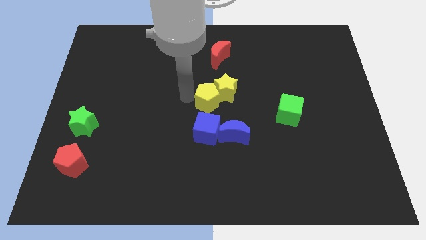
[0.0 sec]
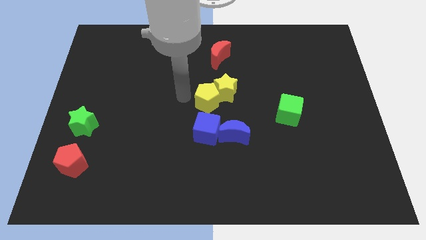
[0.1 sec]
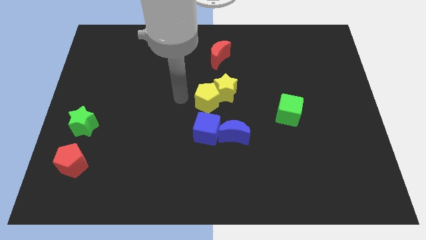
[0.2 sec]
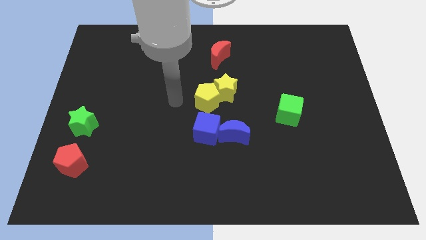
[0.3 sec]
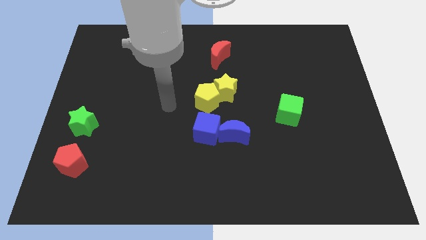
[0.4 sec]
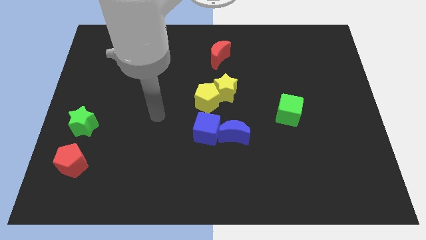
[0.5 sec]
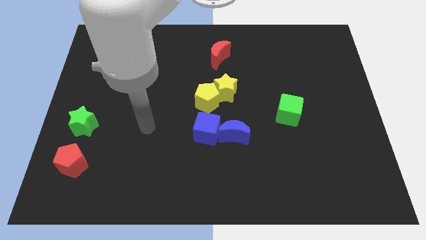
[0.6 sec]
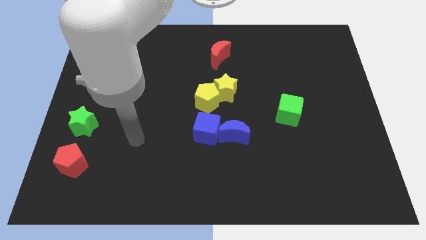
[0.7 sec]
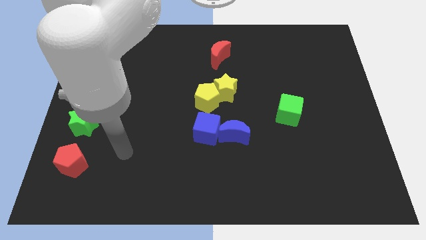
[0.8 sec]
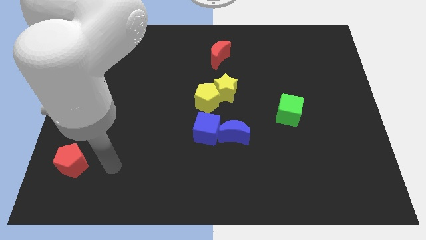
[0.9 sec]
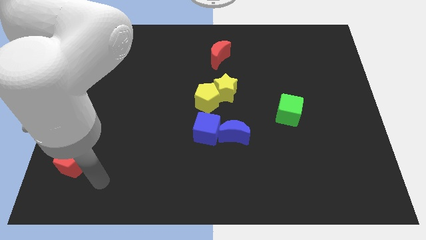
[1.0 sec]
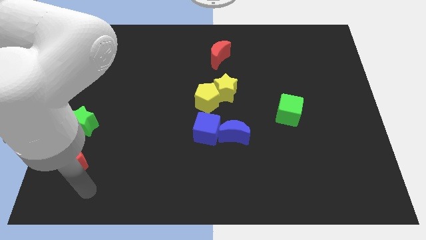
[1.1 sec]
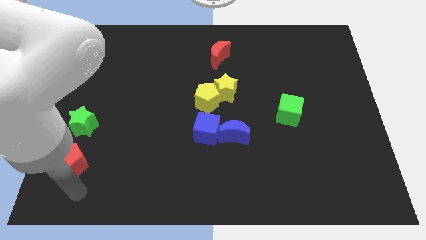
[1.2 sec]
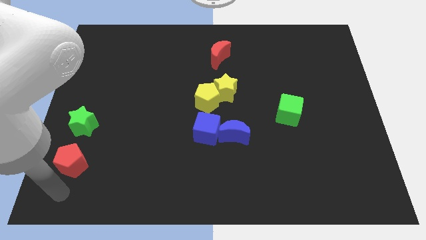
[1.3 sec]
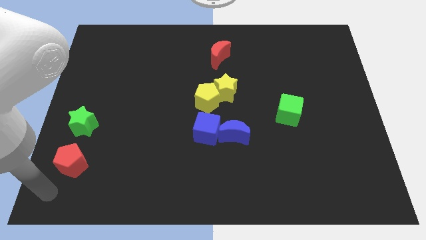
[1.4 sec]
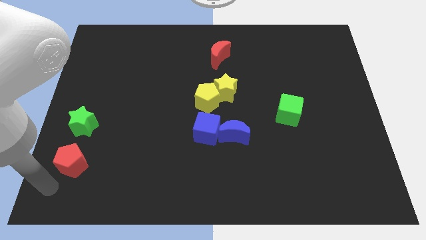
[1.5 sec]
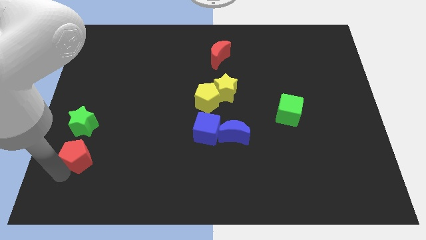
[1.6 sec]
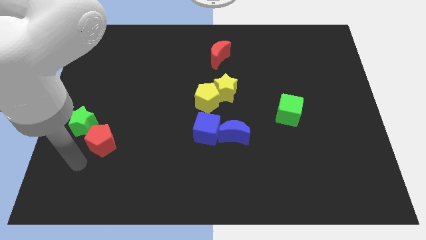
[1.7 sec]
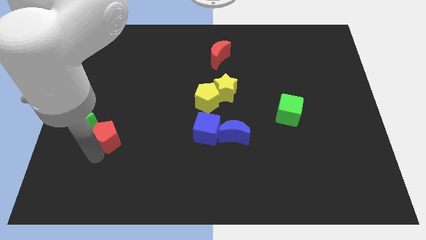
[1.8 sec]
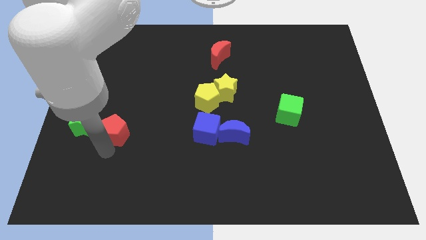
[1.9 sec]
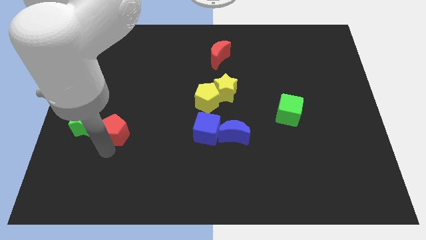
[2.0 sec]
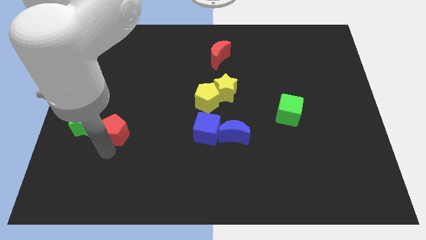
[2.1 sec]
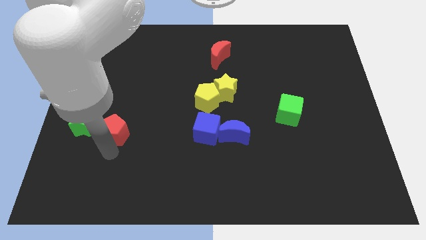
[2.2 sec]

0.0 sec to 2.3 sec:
push the red pentagon to the right of green star

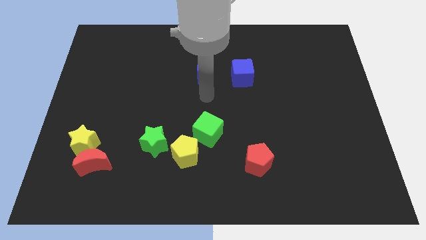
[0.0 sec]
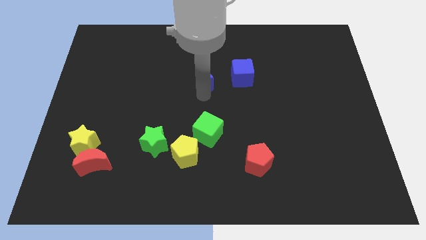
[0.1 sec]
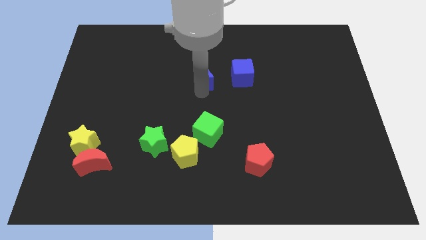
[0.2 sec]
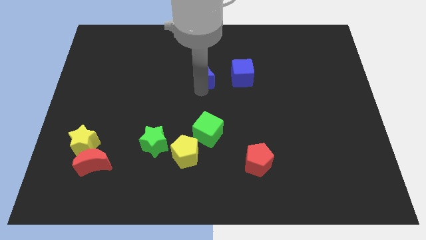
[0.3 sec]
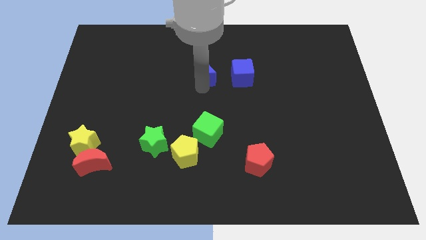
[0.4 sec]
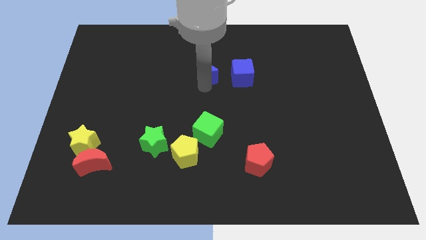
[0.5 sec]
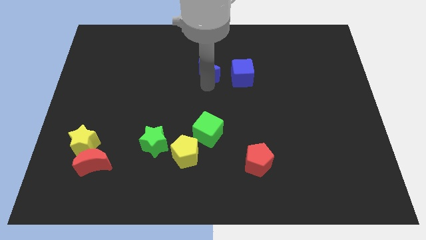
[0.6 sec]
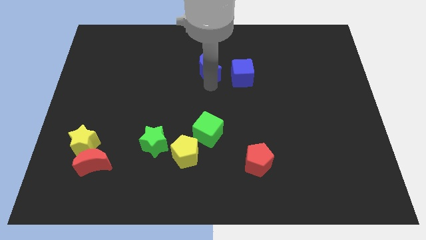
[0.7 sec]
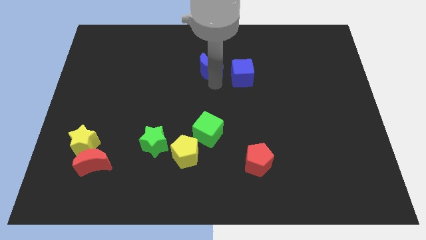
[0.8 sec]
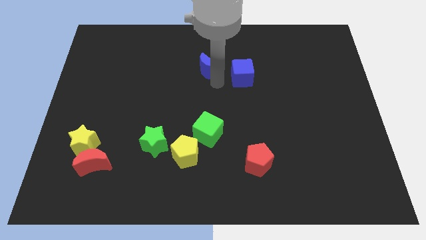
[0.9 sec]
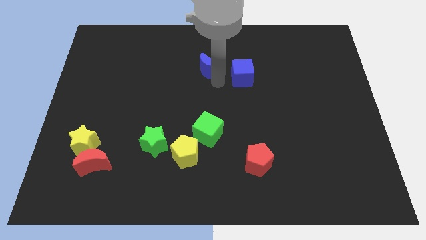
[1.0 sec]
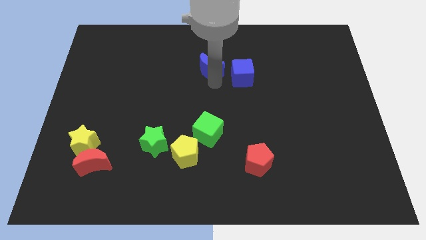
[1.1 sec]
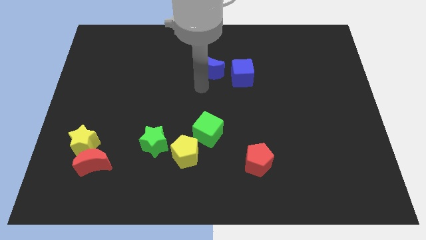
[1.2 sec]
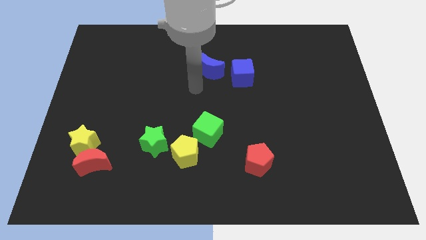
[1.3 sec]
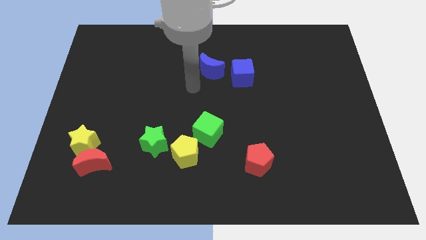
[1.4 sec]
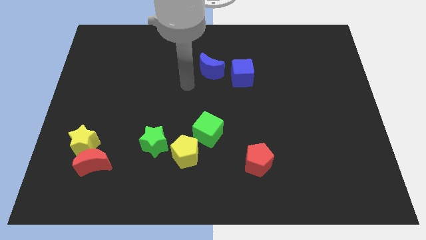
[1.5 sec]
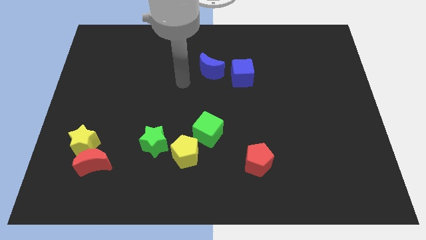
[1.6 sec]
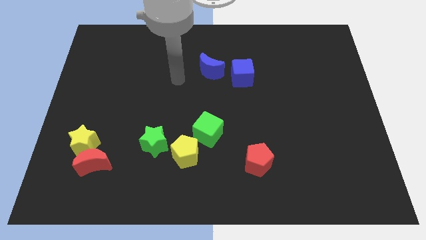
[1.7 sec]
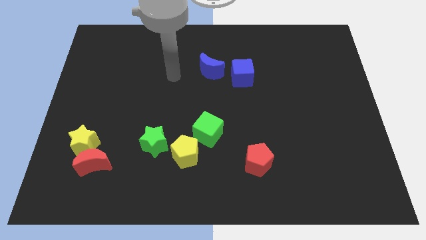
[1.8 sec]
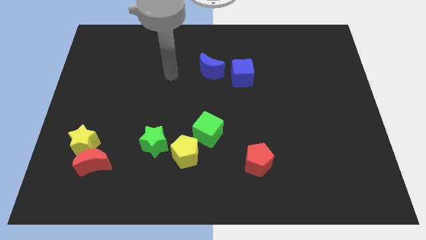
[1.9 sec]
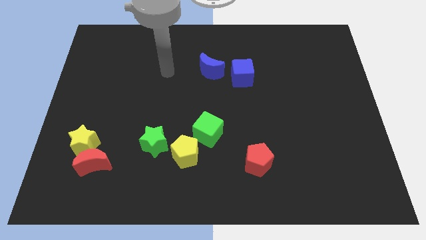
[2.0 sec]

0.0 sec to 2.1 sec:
slide the blue crescent to the left side of the blue cube

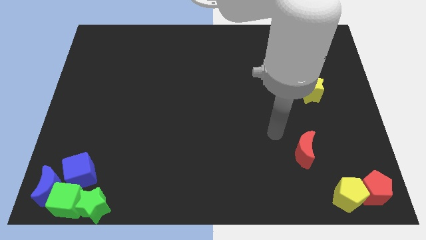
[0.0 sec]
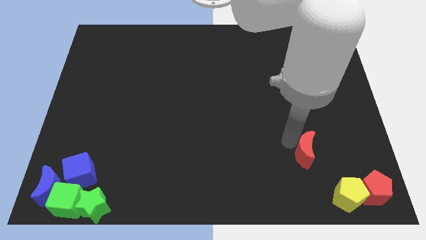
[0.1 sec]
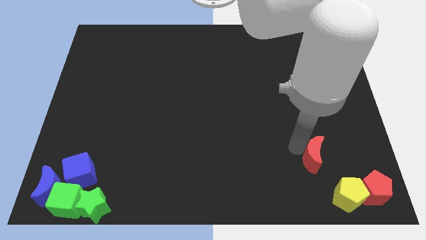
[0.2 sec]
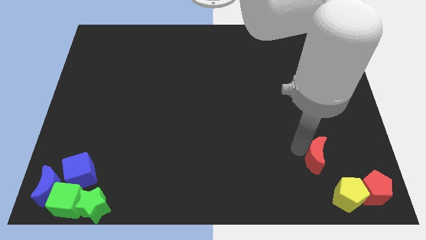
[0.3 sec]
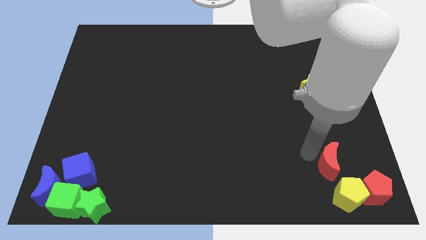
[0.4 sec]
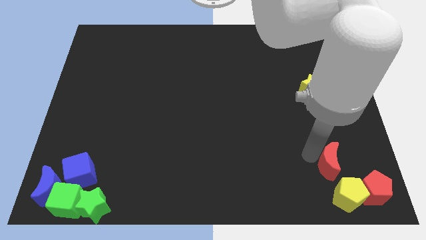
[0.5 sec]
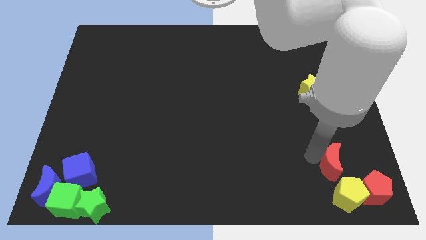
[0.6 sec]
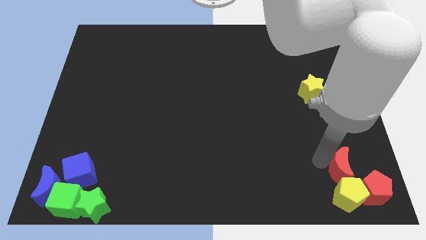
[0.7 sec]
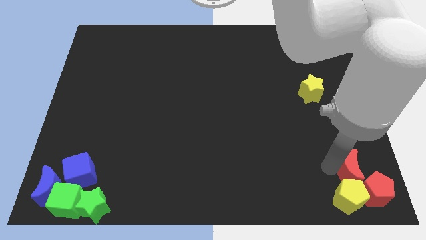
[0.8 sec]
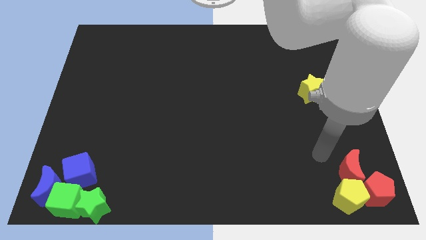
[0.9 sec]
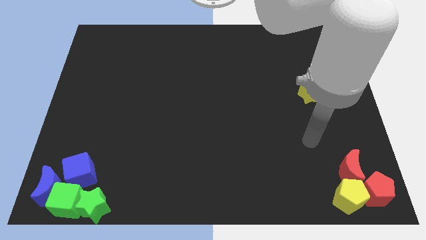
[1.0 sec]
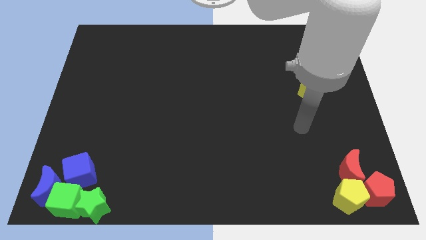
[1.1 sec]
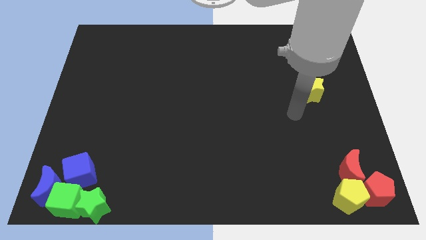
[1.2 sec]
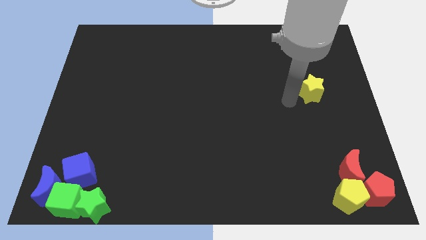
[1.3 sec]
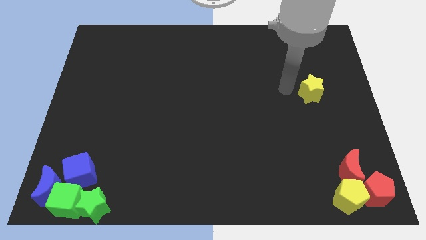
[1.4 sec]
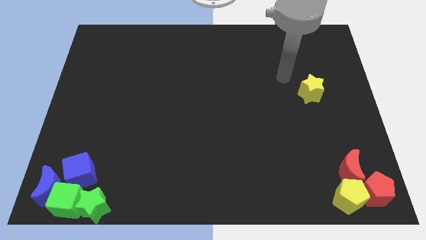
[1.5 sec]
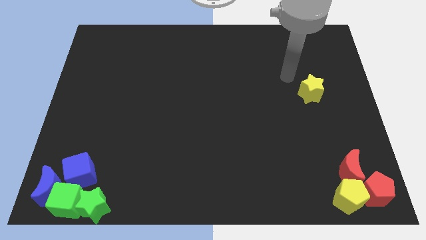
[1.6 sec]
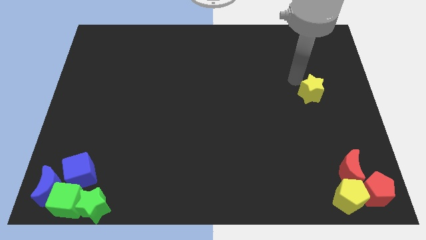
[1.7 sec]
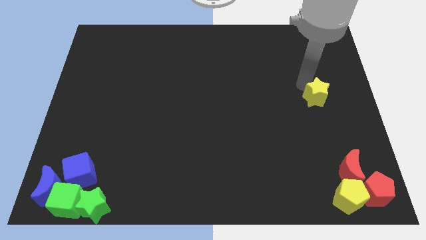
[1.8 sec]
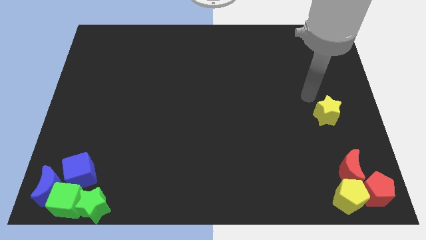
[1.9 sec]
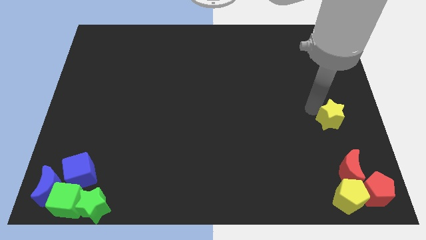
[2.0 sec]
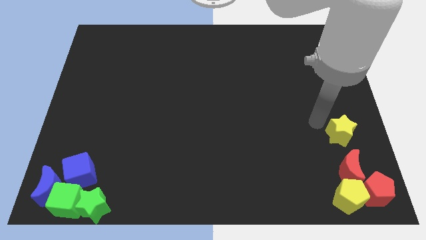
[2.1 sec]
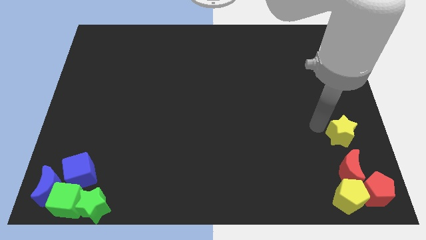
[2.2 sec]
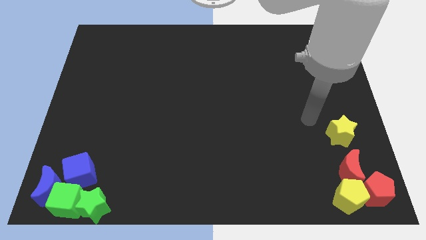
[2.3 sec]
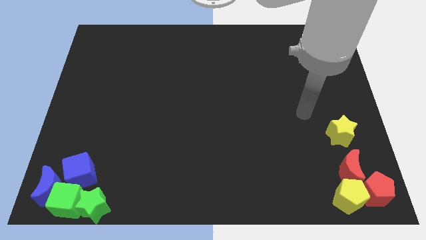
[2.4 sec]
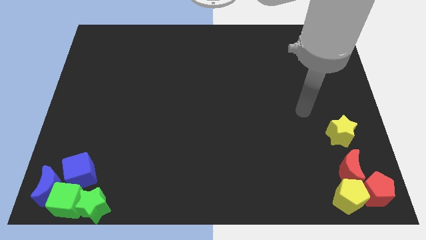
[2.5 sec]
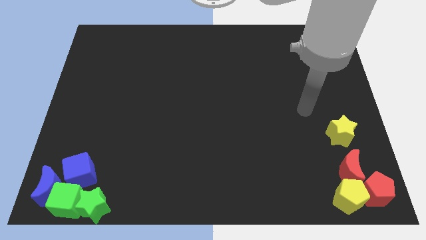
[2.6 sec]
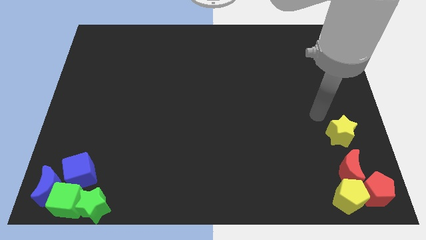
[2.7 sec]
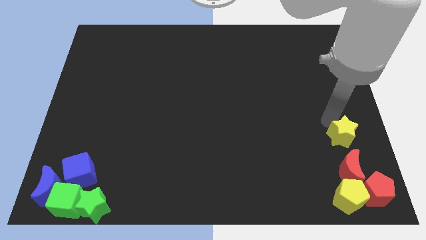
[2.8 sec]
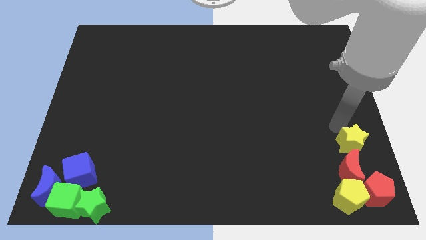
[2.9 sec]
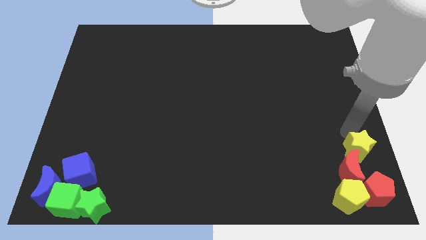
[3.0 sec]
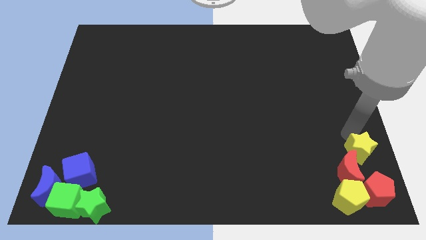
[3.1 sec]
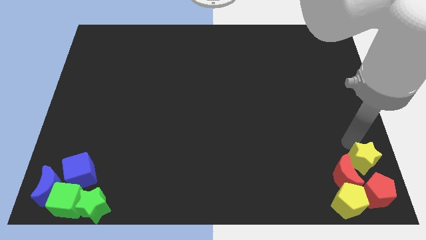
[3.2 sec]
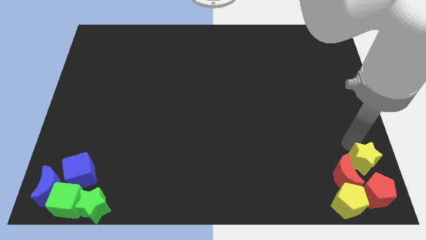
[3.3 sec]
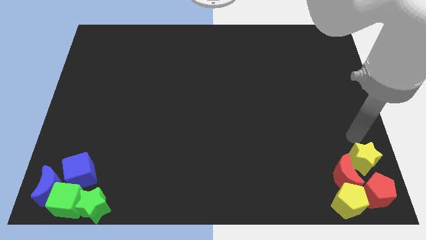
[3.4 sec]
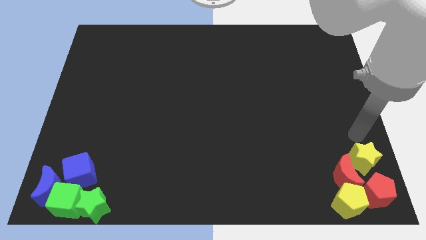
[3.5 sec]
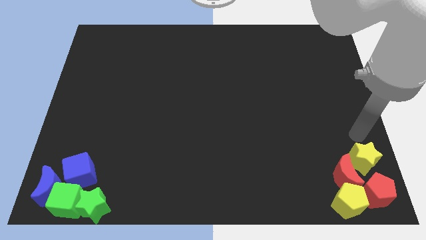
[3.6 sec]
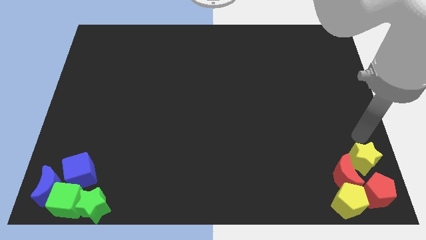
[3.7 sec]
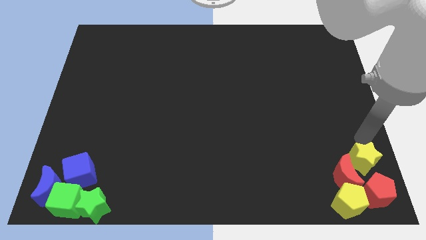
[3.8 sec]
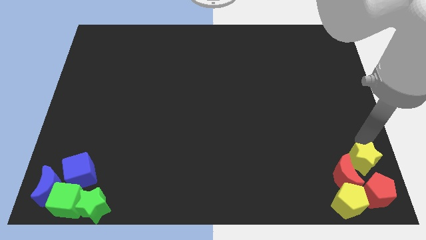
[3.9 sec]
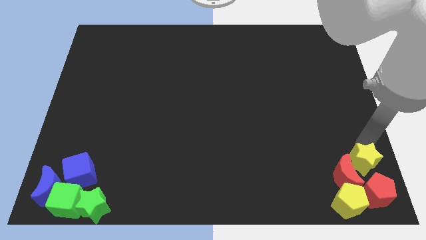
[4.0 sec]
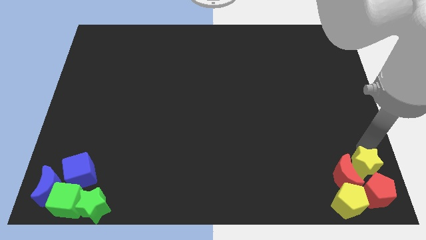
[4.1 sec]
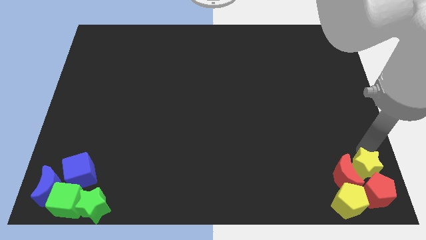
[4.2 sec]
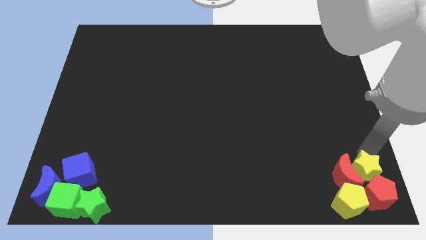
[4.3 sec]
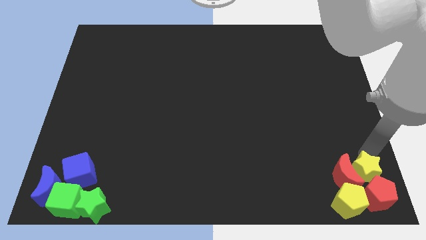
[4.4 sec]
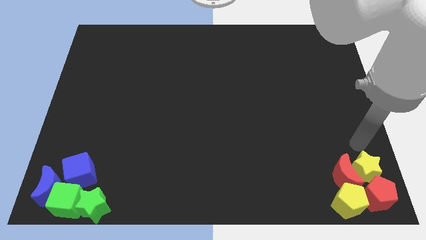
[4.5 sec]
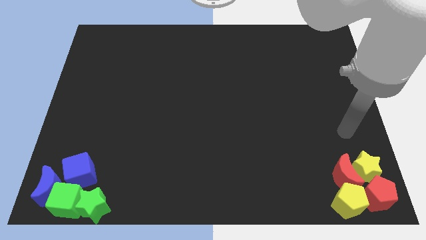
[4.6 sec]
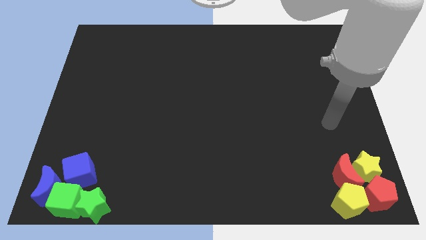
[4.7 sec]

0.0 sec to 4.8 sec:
push the red moon and yellow star into the group of blocks
